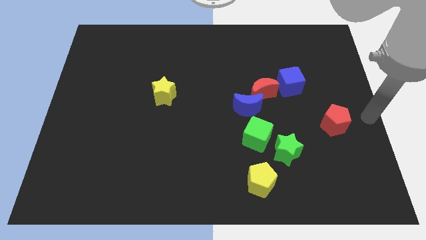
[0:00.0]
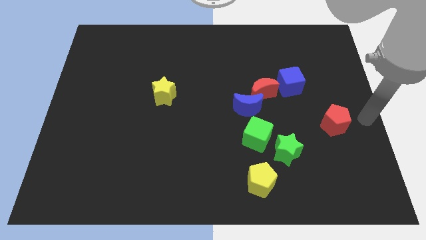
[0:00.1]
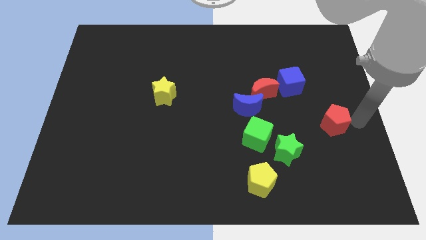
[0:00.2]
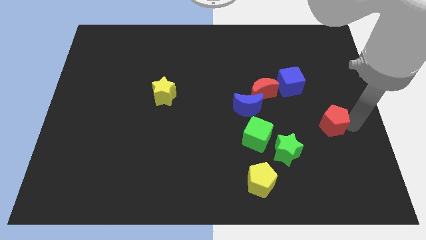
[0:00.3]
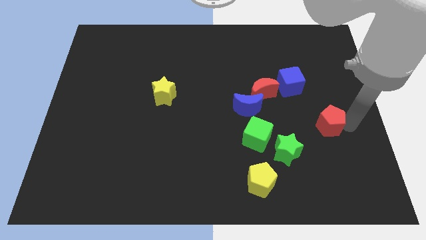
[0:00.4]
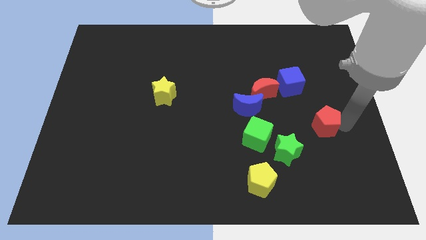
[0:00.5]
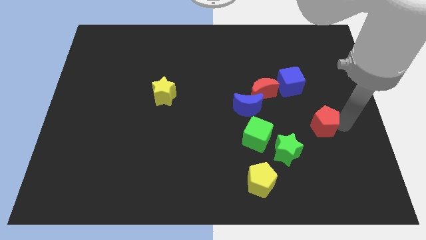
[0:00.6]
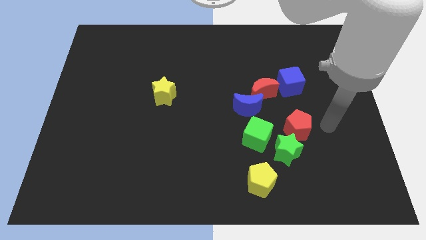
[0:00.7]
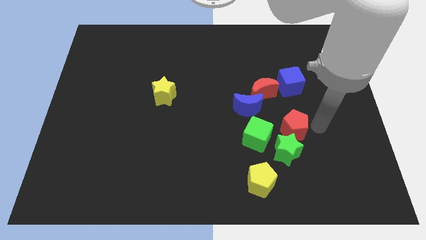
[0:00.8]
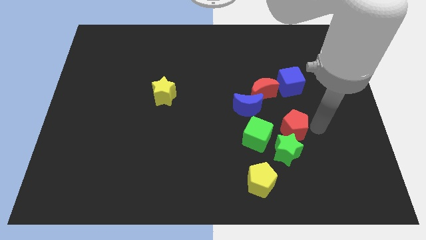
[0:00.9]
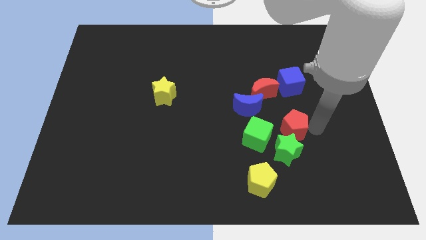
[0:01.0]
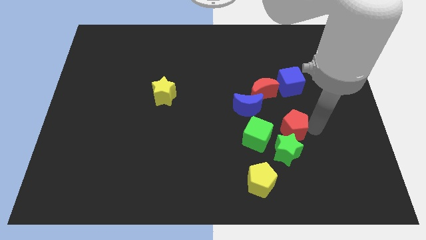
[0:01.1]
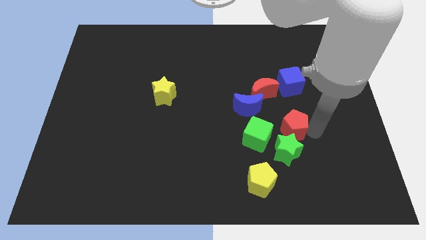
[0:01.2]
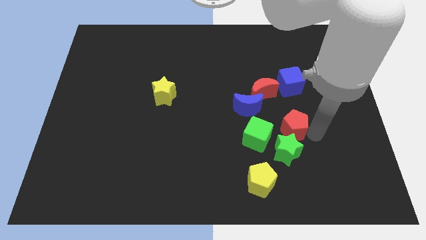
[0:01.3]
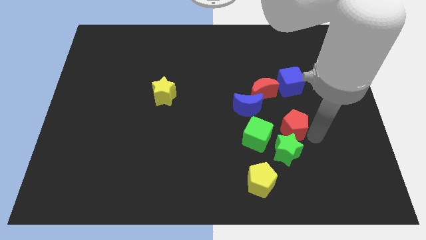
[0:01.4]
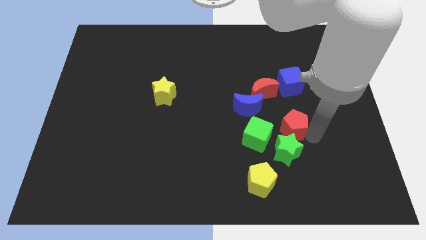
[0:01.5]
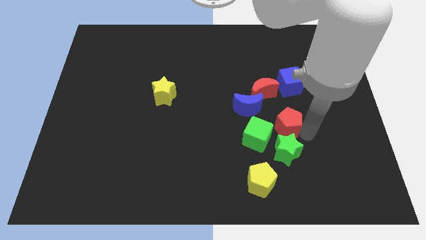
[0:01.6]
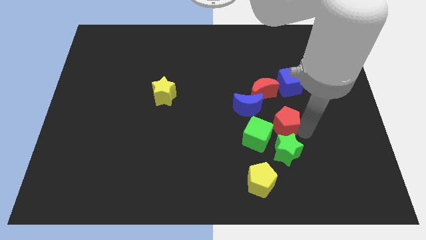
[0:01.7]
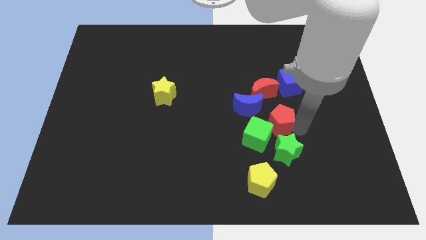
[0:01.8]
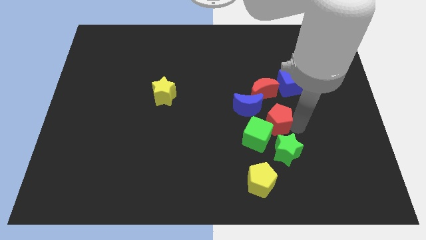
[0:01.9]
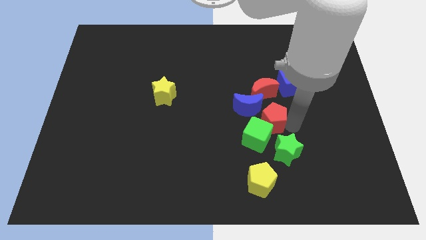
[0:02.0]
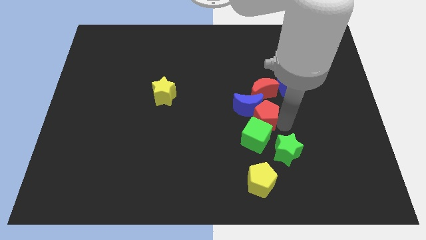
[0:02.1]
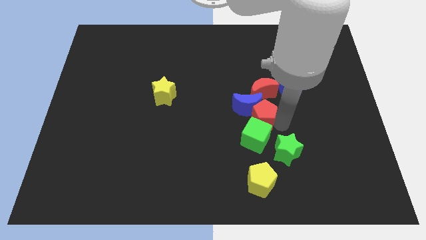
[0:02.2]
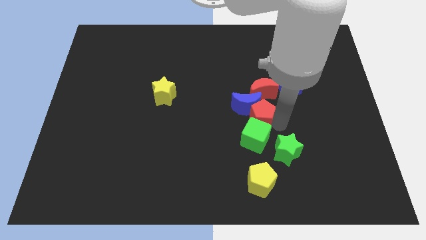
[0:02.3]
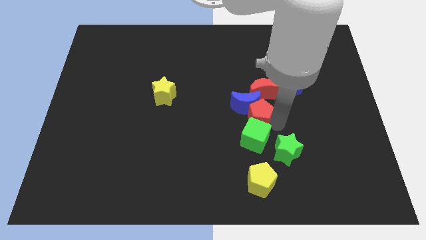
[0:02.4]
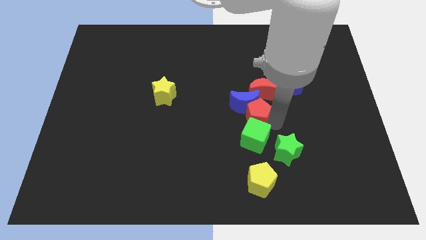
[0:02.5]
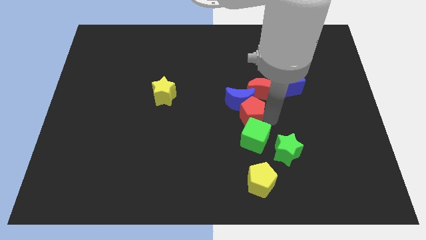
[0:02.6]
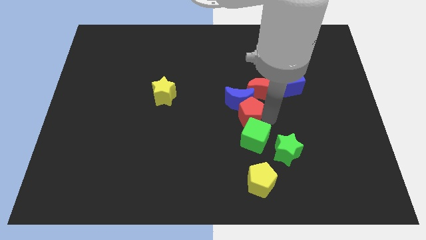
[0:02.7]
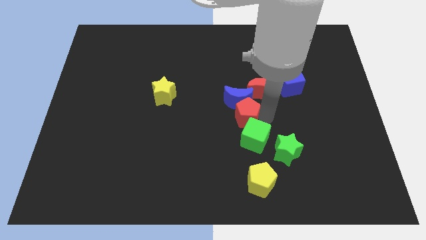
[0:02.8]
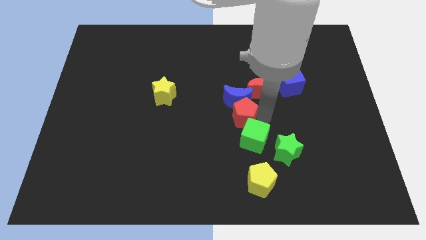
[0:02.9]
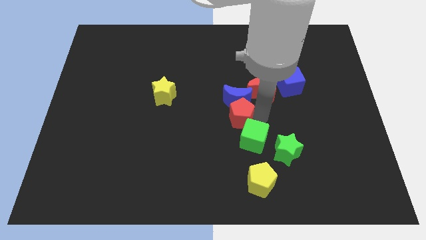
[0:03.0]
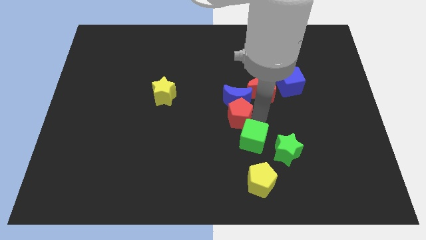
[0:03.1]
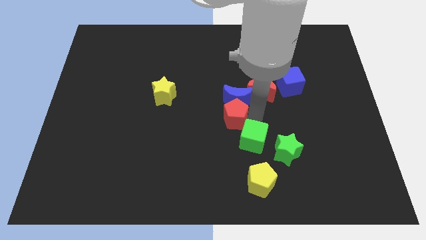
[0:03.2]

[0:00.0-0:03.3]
move red pentagon below blue moon

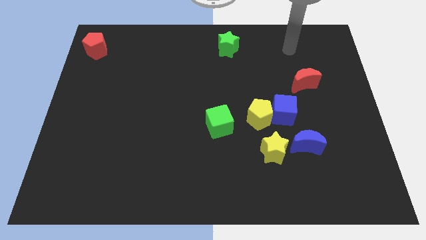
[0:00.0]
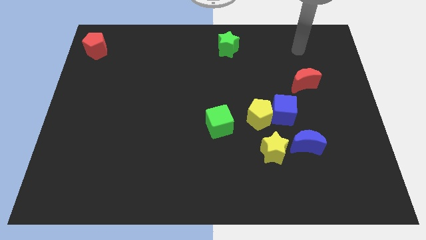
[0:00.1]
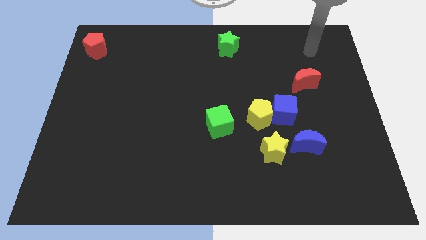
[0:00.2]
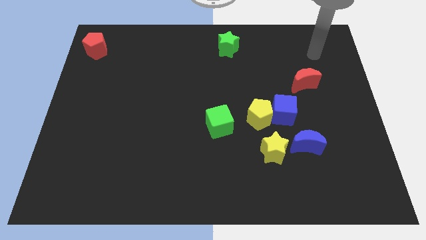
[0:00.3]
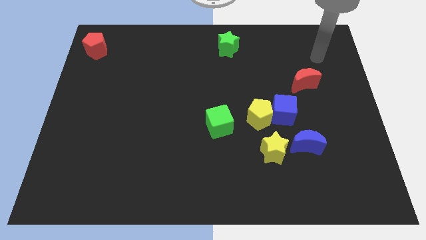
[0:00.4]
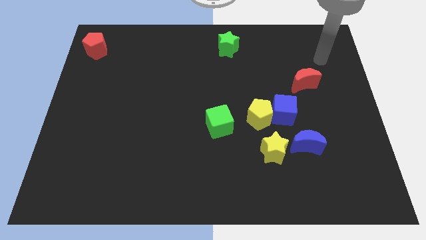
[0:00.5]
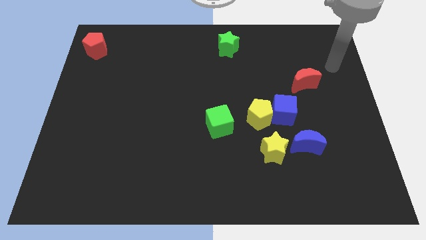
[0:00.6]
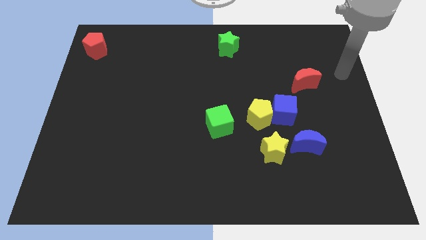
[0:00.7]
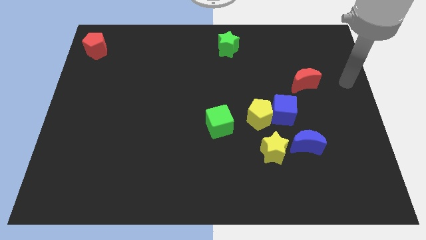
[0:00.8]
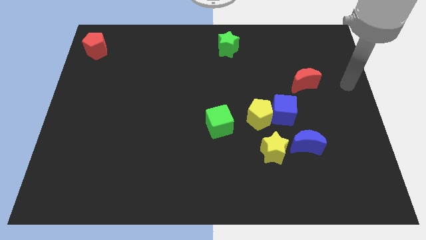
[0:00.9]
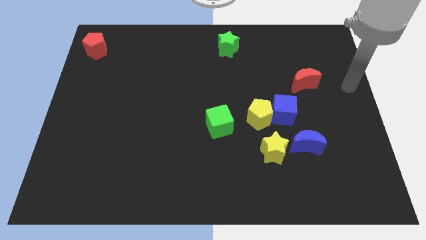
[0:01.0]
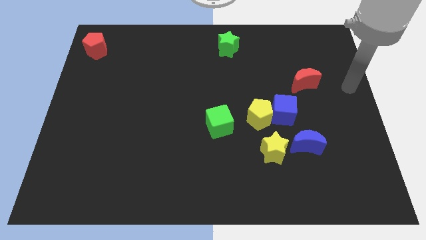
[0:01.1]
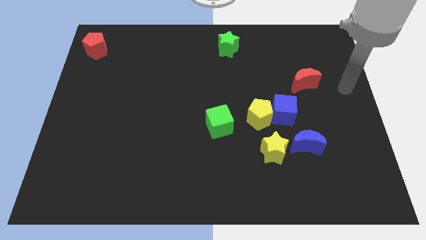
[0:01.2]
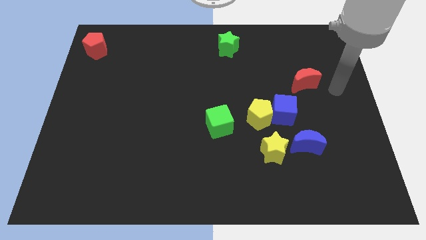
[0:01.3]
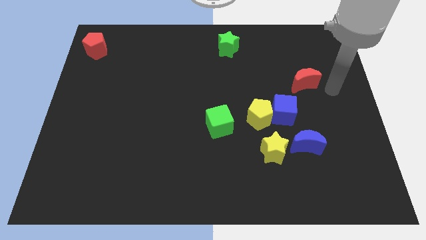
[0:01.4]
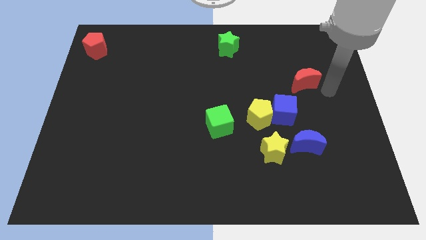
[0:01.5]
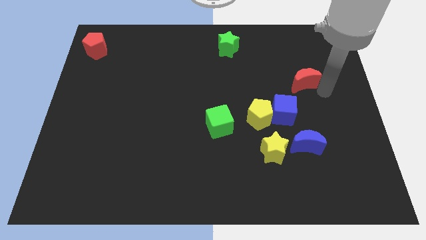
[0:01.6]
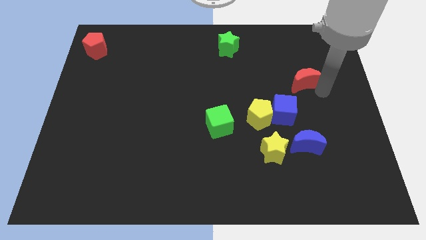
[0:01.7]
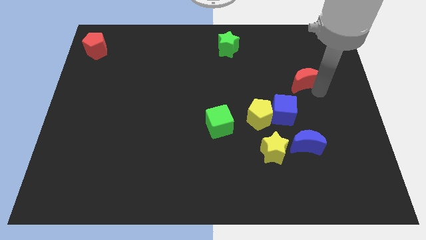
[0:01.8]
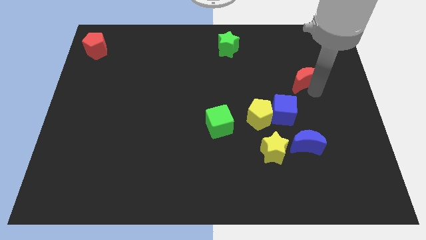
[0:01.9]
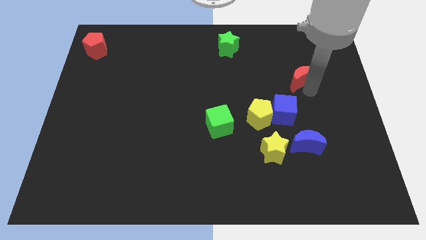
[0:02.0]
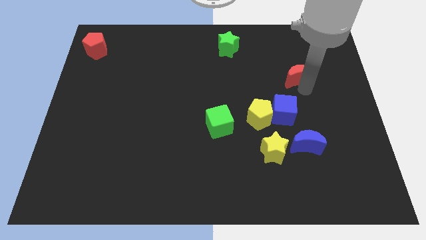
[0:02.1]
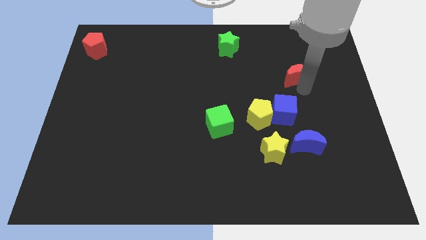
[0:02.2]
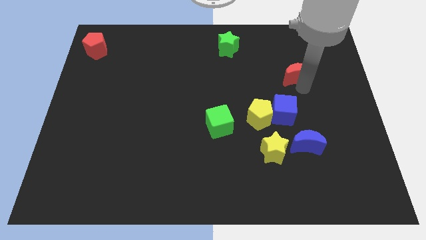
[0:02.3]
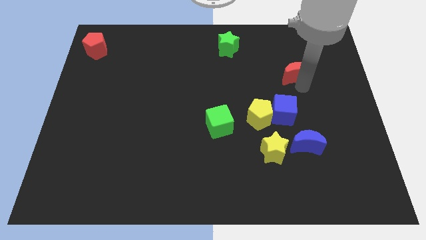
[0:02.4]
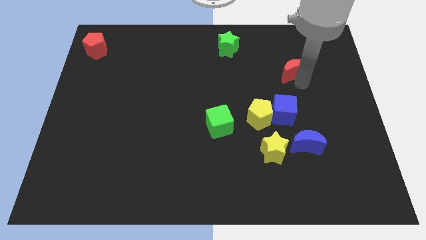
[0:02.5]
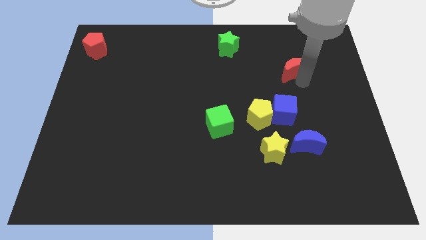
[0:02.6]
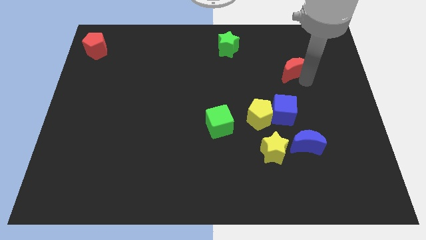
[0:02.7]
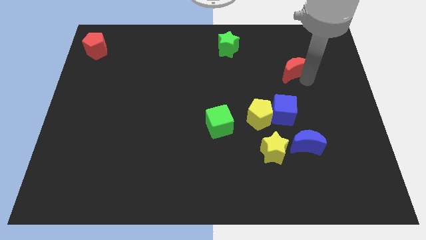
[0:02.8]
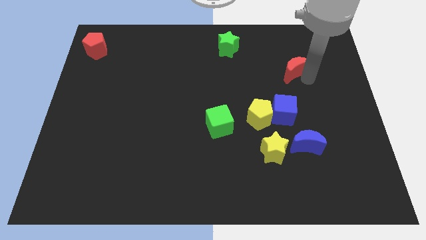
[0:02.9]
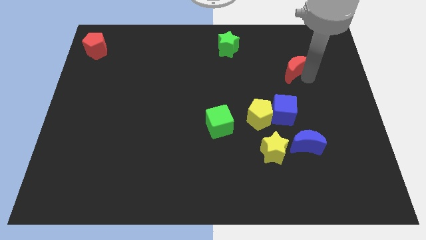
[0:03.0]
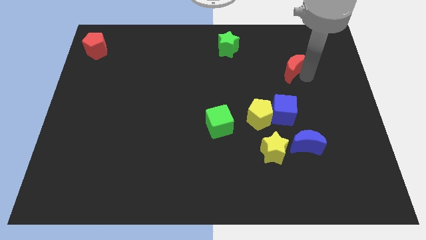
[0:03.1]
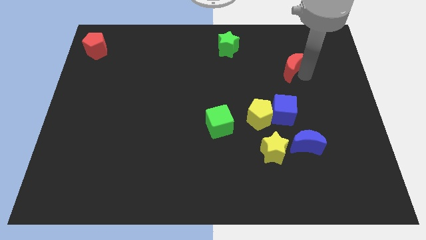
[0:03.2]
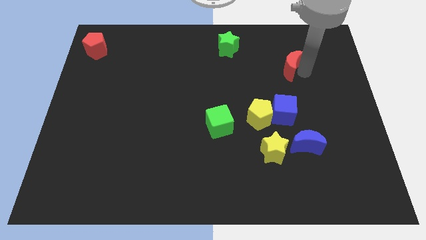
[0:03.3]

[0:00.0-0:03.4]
separate the red crescent from the blue cube

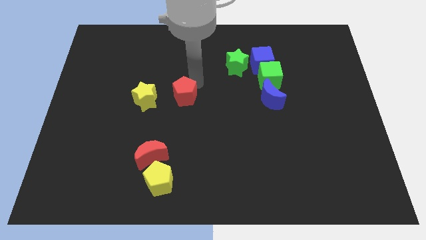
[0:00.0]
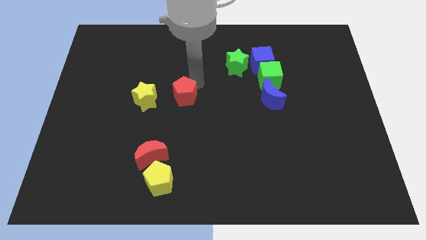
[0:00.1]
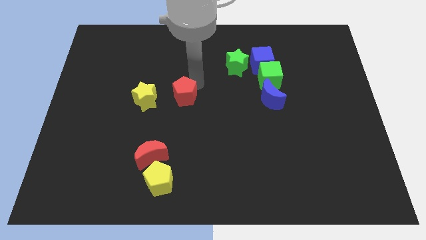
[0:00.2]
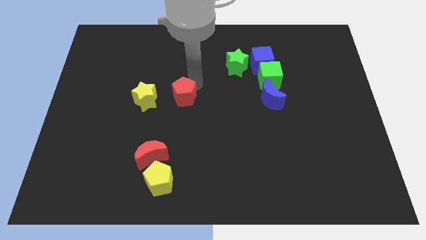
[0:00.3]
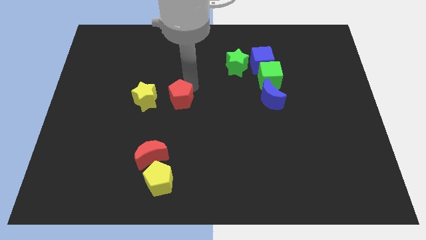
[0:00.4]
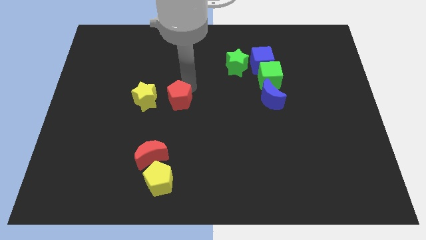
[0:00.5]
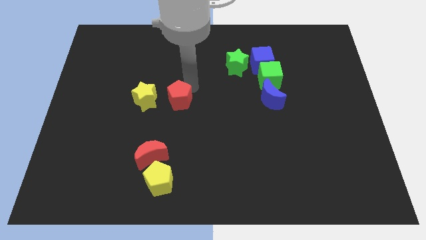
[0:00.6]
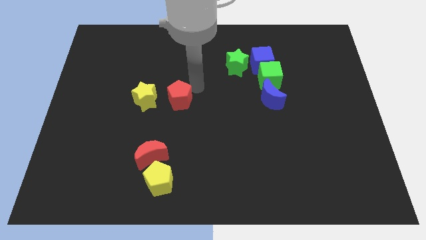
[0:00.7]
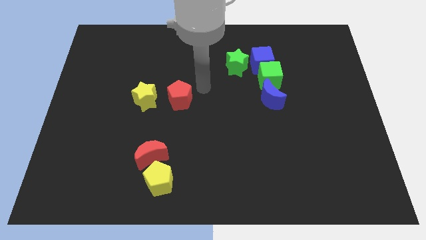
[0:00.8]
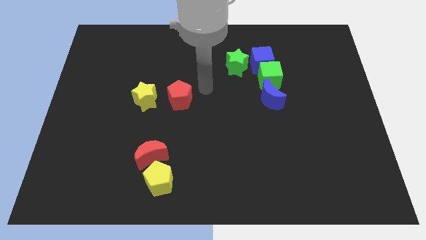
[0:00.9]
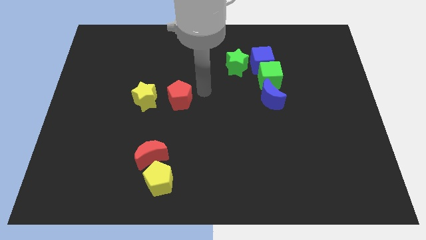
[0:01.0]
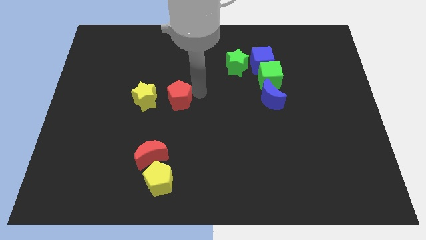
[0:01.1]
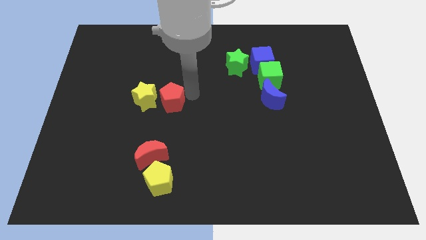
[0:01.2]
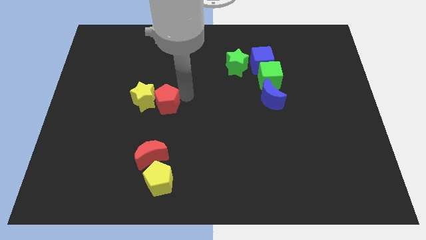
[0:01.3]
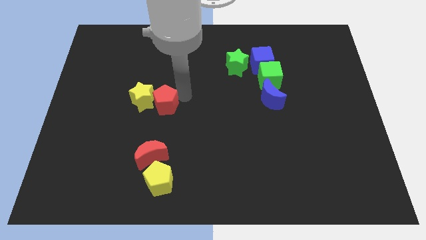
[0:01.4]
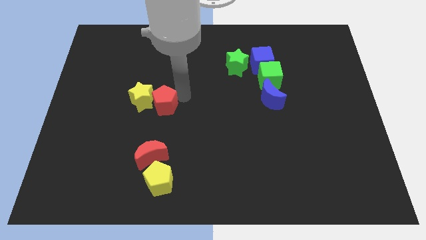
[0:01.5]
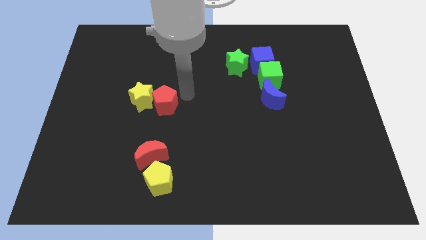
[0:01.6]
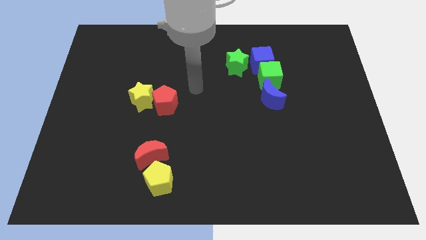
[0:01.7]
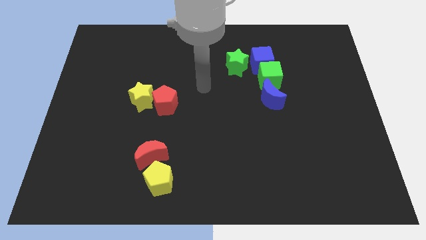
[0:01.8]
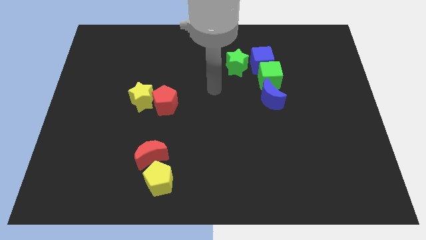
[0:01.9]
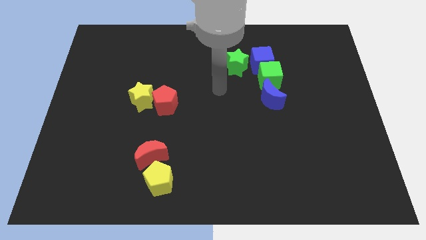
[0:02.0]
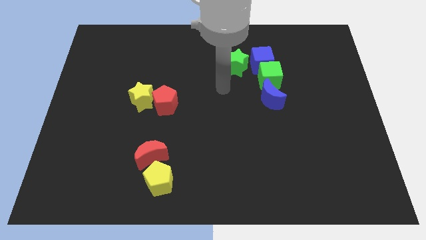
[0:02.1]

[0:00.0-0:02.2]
move the red pentagon into the yellow star
